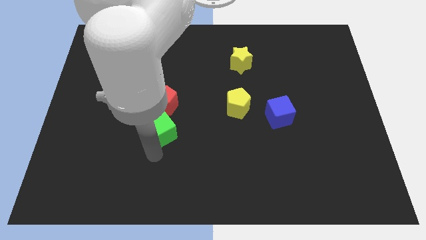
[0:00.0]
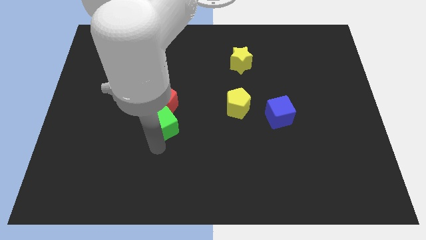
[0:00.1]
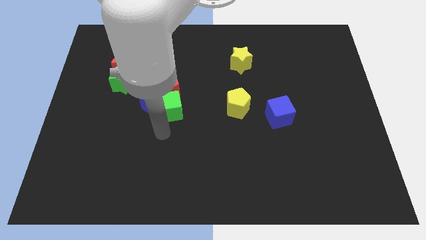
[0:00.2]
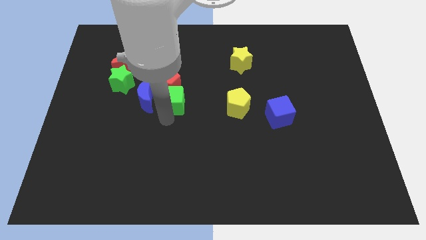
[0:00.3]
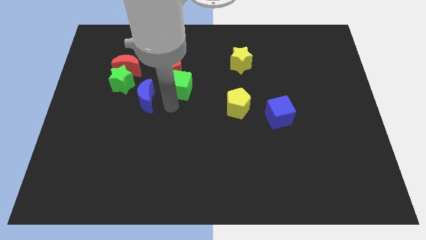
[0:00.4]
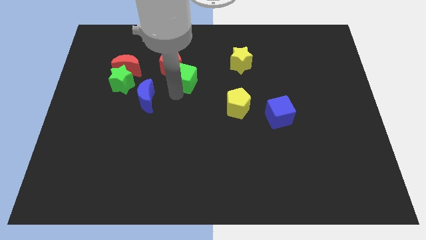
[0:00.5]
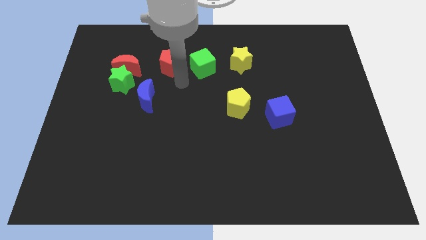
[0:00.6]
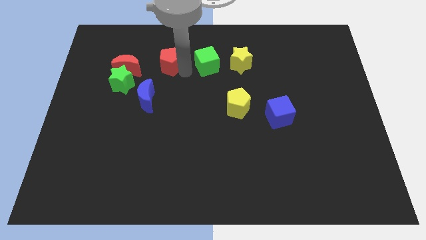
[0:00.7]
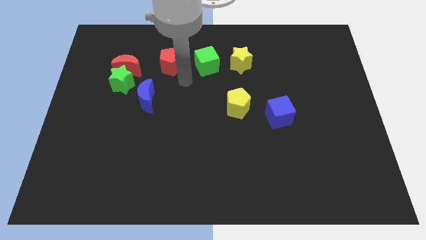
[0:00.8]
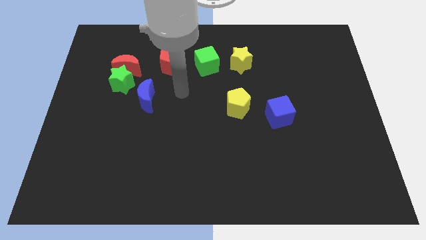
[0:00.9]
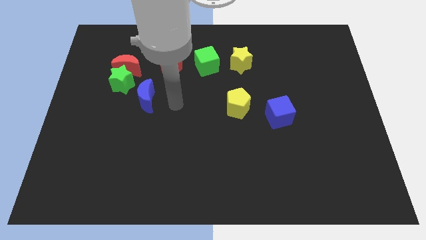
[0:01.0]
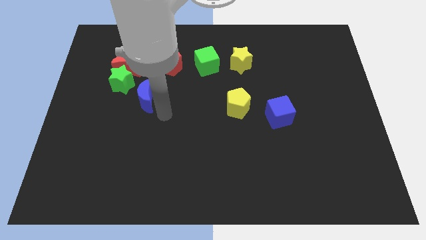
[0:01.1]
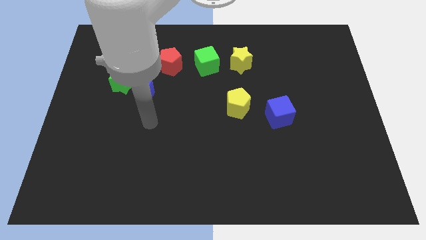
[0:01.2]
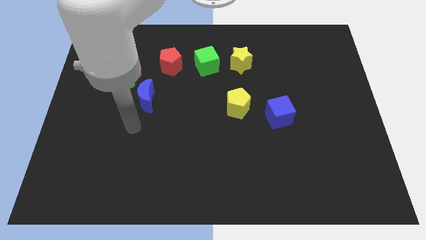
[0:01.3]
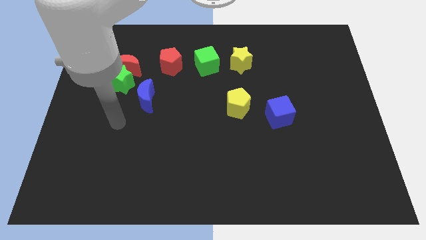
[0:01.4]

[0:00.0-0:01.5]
place the green cube in between the red pentagon and yellow star

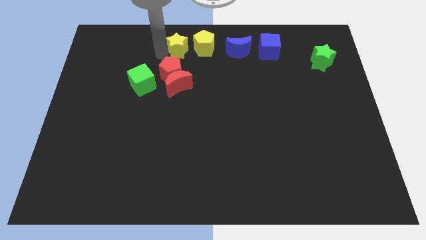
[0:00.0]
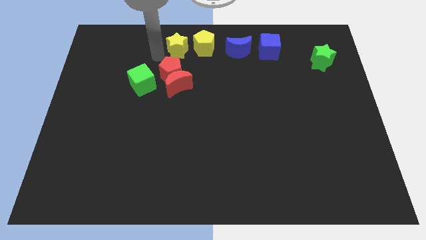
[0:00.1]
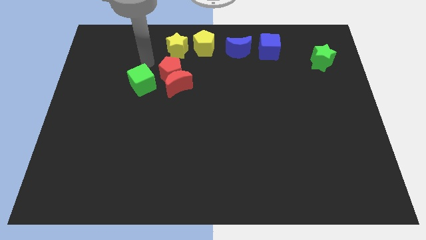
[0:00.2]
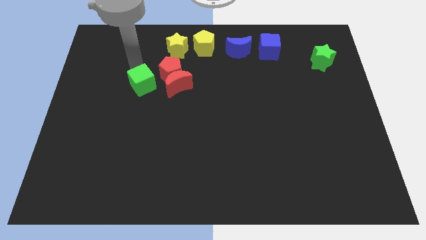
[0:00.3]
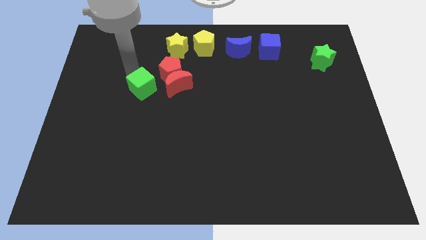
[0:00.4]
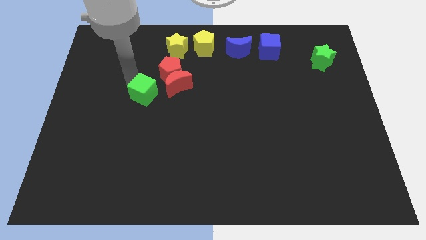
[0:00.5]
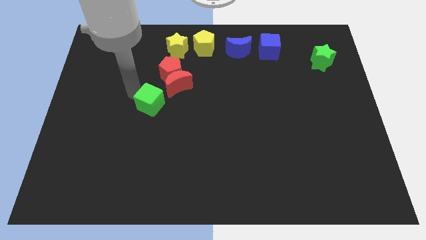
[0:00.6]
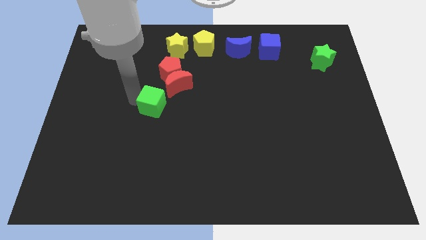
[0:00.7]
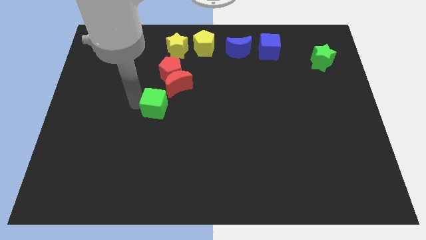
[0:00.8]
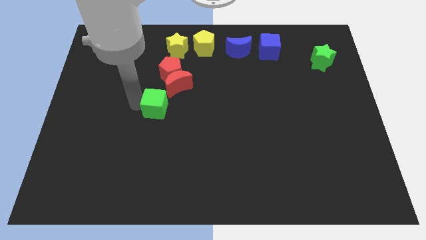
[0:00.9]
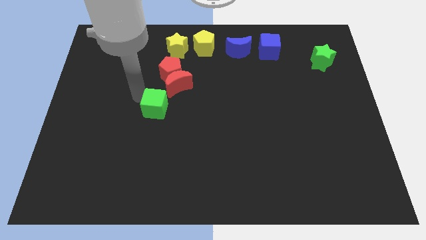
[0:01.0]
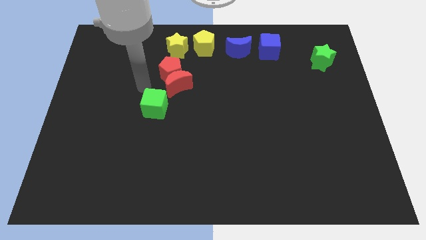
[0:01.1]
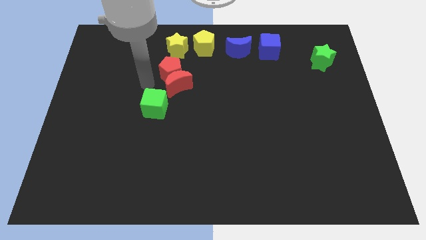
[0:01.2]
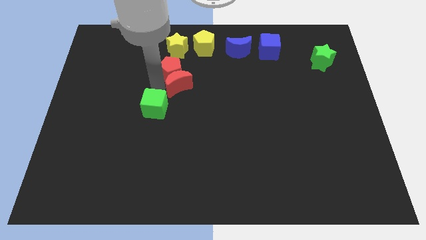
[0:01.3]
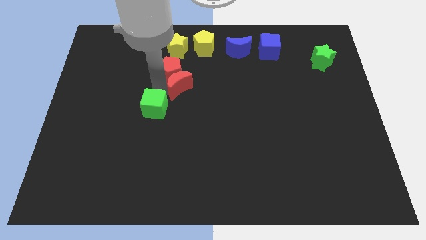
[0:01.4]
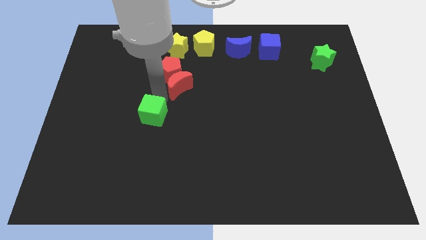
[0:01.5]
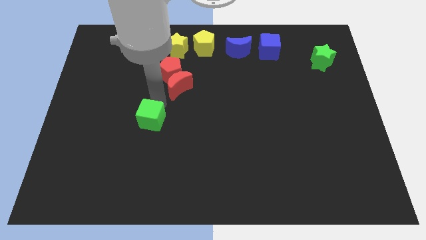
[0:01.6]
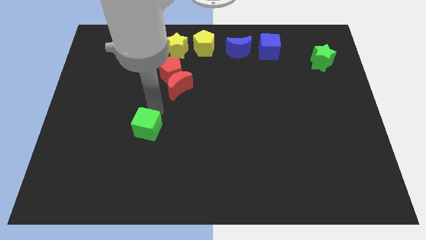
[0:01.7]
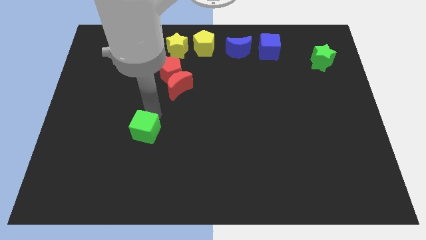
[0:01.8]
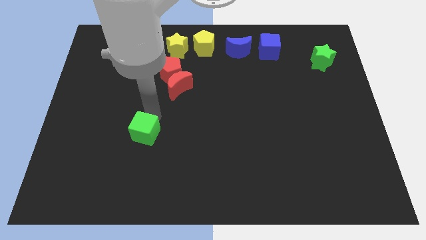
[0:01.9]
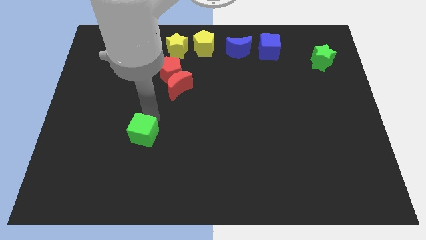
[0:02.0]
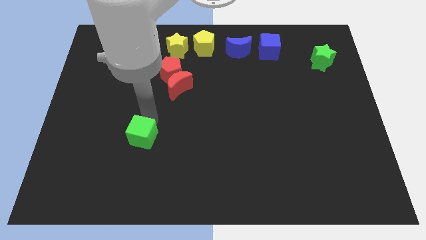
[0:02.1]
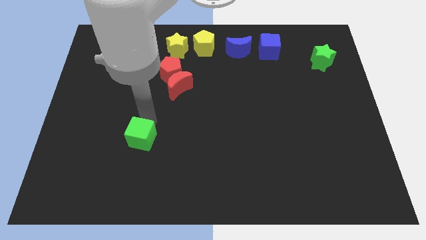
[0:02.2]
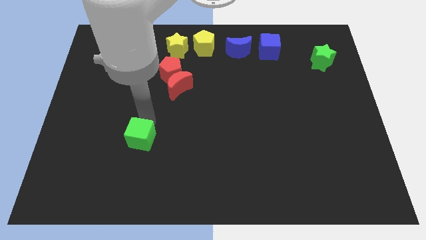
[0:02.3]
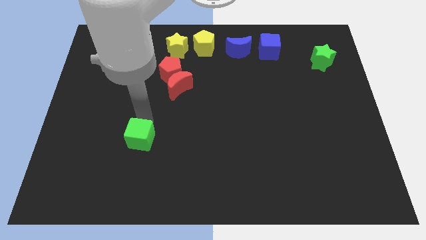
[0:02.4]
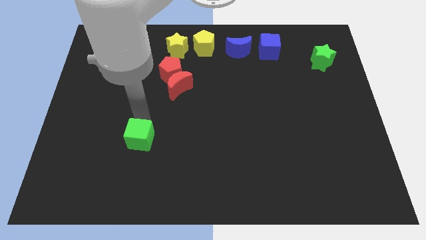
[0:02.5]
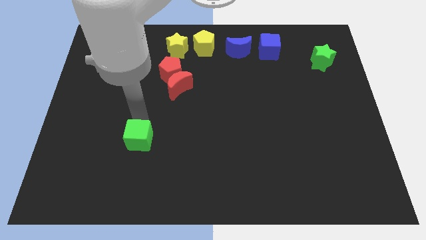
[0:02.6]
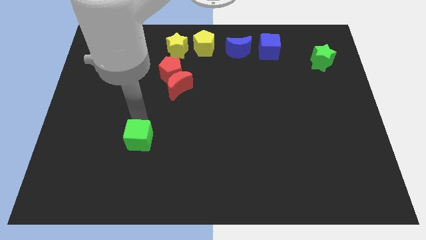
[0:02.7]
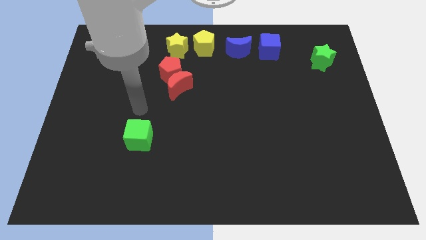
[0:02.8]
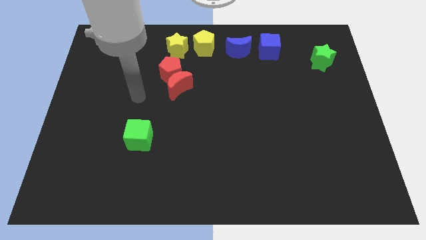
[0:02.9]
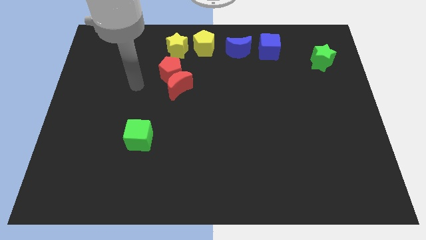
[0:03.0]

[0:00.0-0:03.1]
slide the green cube downwards

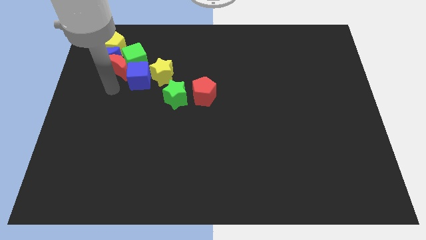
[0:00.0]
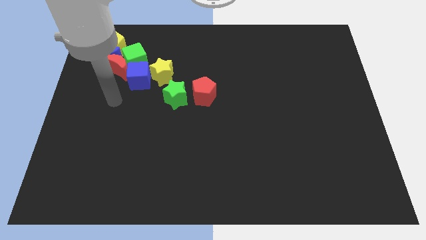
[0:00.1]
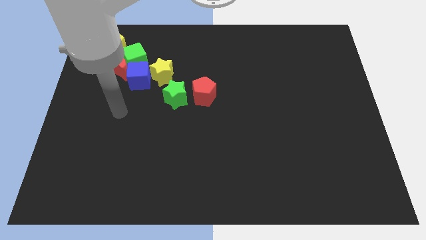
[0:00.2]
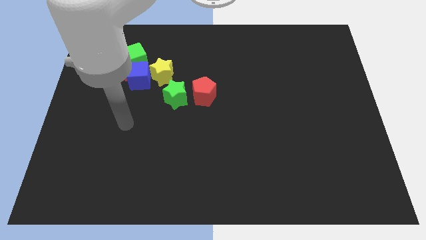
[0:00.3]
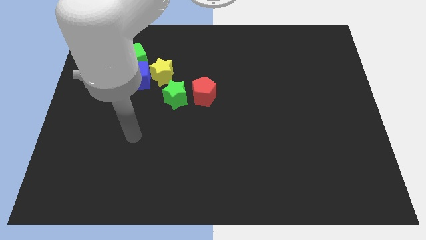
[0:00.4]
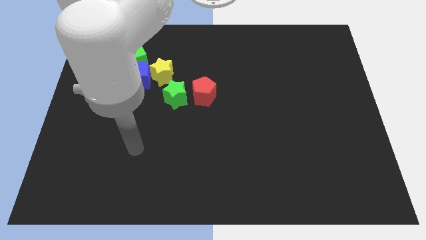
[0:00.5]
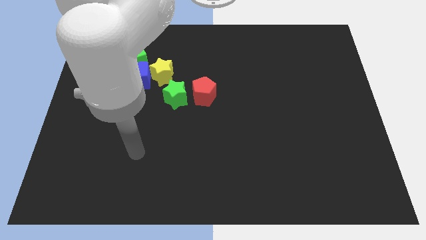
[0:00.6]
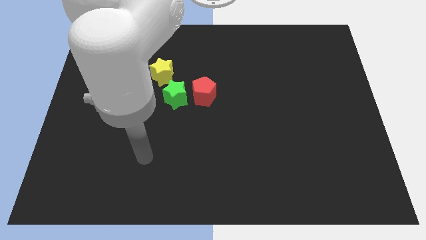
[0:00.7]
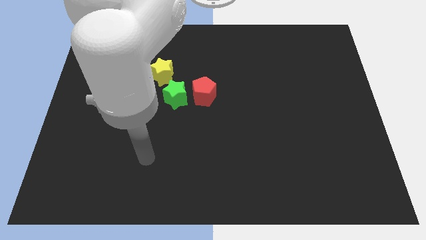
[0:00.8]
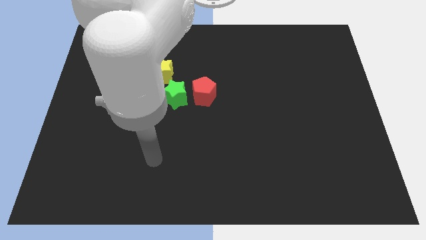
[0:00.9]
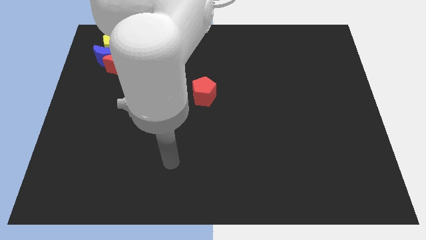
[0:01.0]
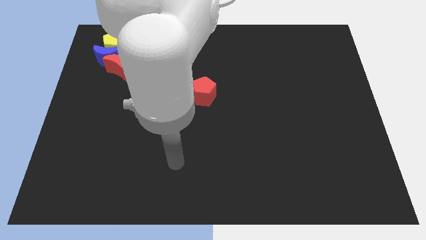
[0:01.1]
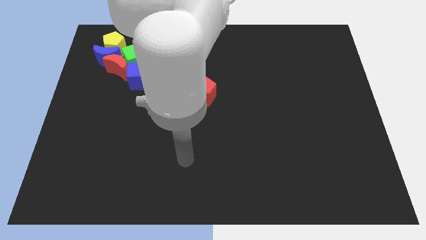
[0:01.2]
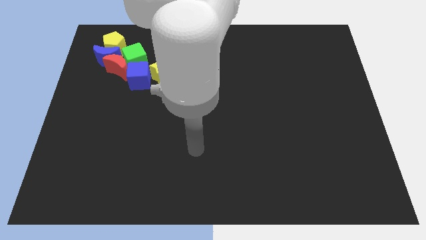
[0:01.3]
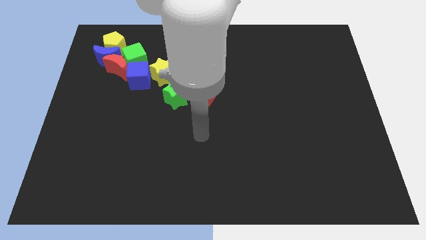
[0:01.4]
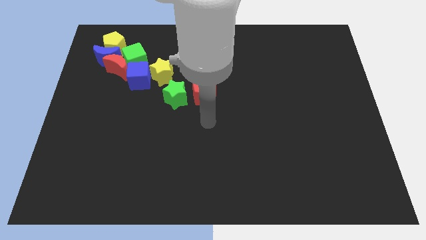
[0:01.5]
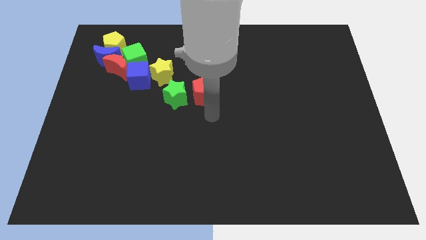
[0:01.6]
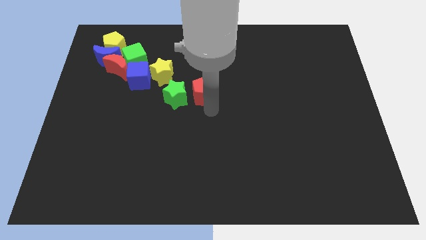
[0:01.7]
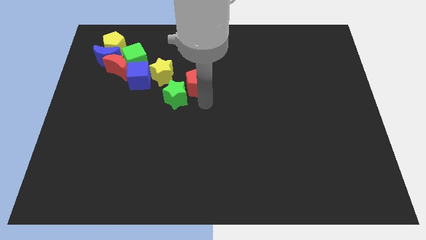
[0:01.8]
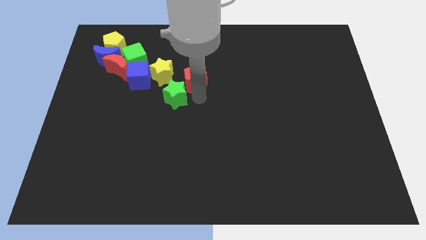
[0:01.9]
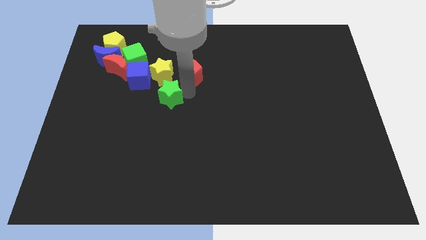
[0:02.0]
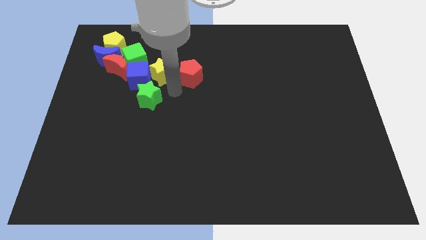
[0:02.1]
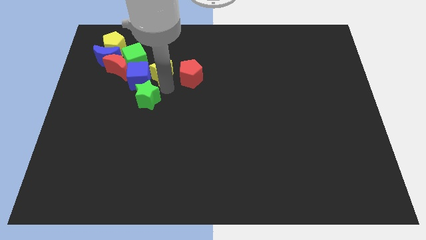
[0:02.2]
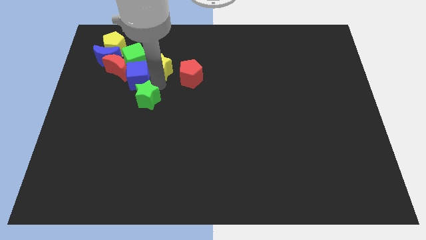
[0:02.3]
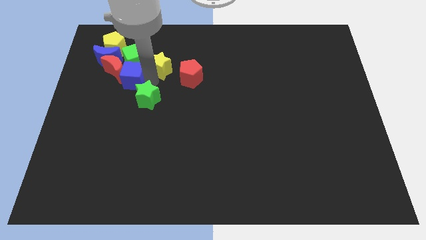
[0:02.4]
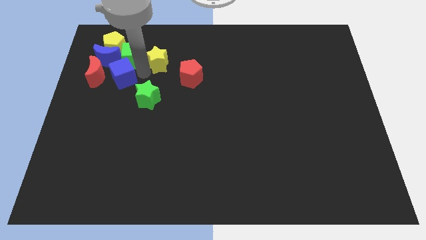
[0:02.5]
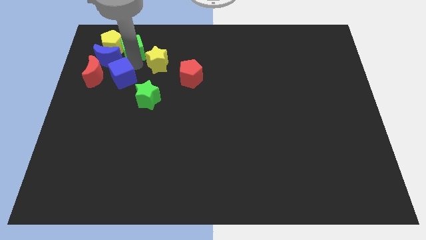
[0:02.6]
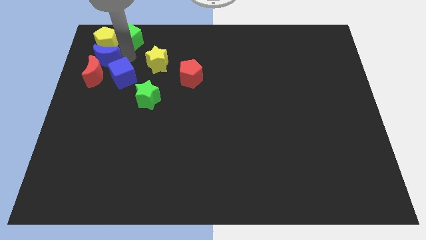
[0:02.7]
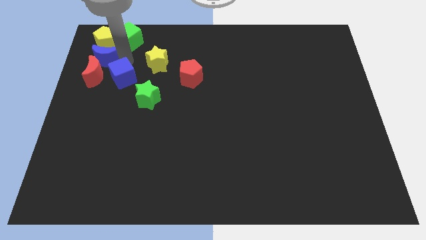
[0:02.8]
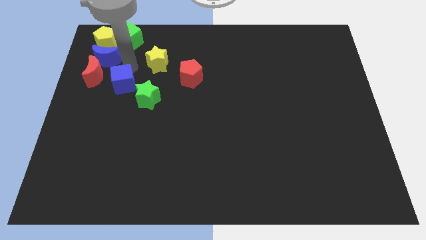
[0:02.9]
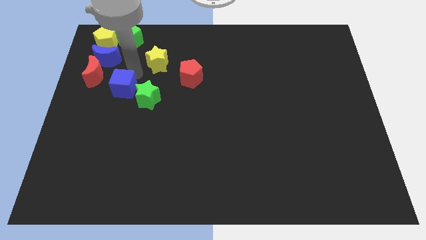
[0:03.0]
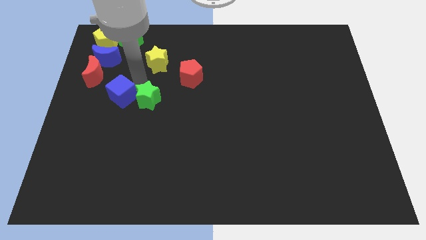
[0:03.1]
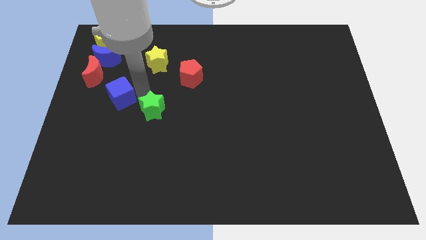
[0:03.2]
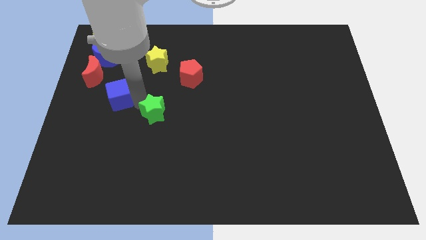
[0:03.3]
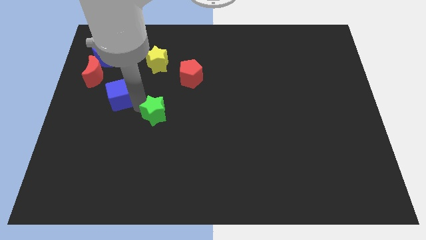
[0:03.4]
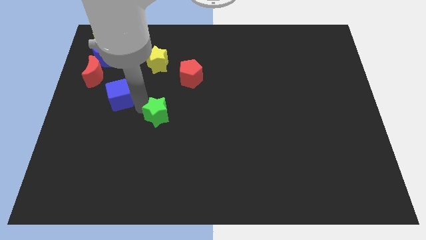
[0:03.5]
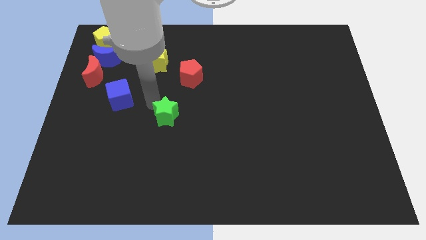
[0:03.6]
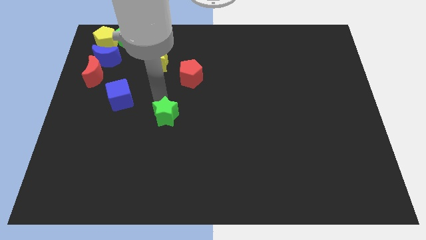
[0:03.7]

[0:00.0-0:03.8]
separate the red pentagon blue cube and stars

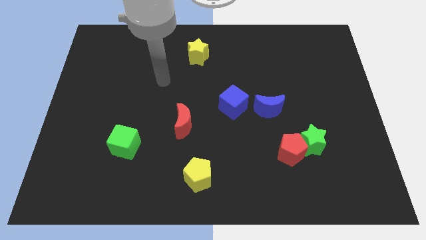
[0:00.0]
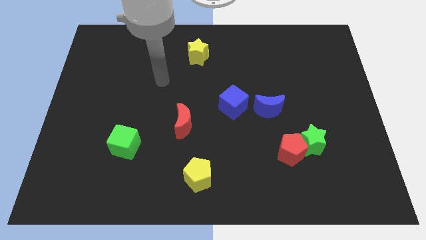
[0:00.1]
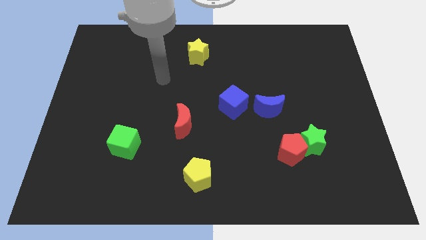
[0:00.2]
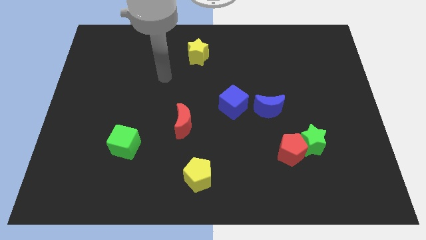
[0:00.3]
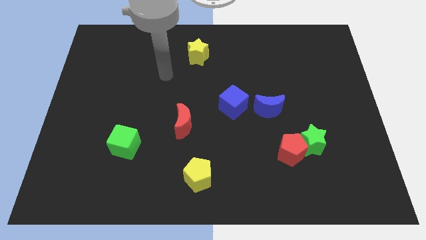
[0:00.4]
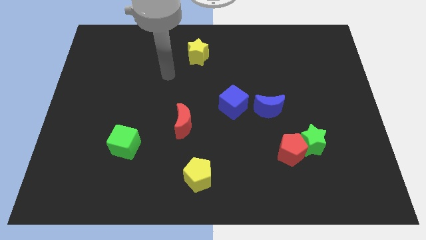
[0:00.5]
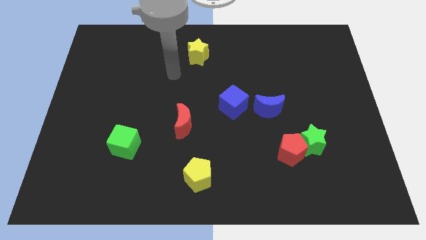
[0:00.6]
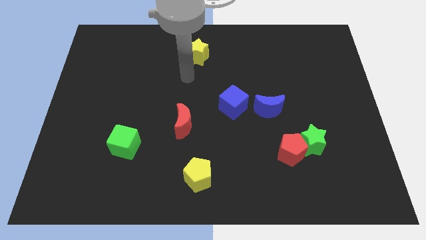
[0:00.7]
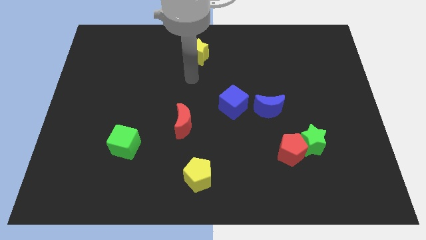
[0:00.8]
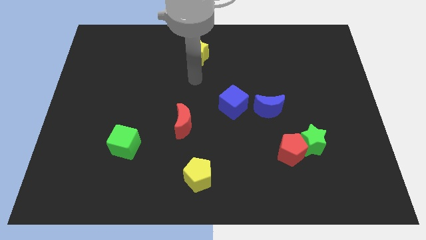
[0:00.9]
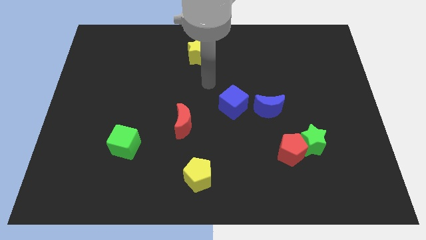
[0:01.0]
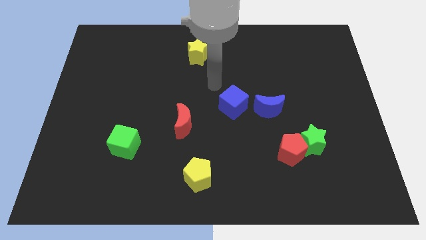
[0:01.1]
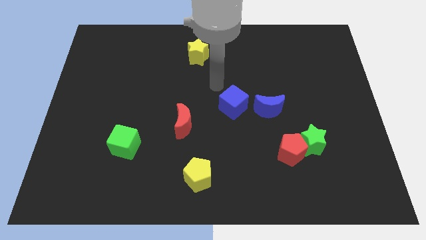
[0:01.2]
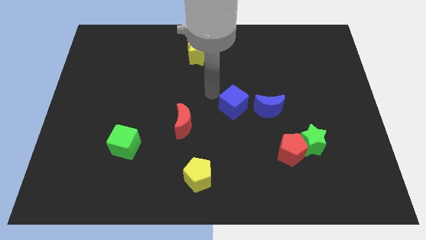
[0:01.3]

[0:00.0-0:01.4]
go near the blue cube
